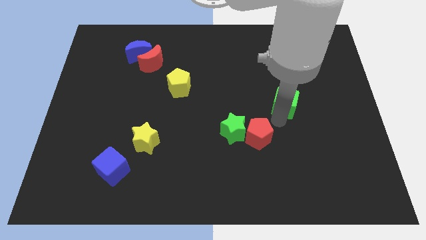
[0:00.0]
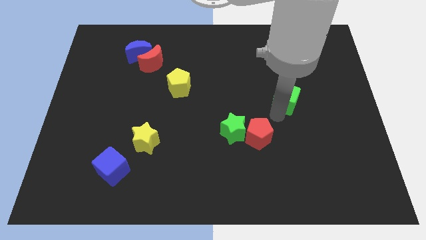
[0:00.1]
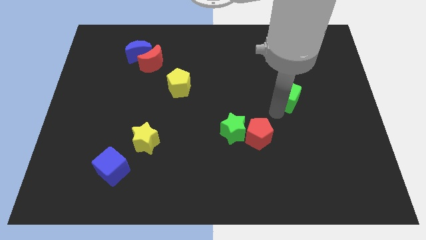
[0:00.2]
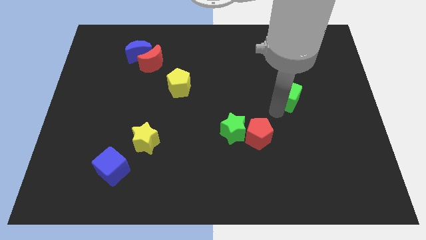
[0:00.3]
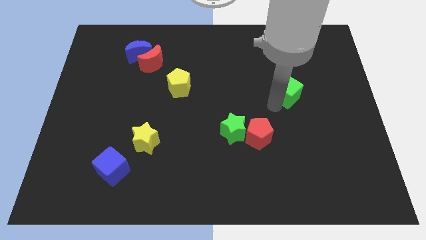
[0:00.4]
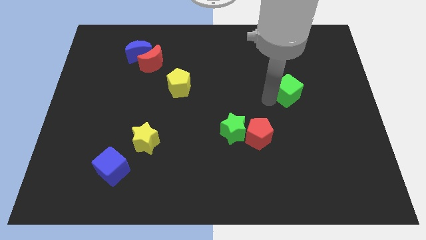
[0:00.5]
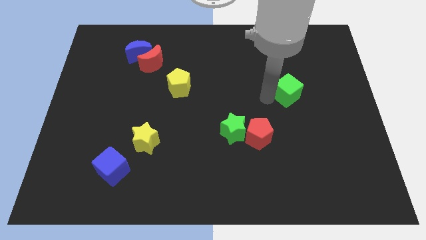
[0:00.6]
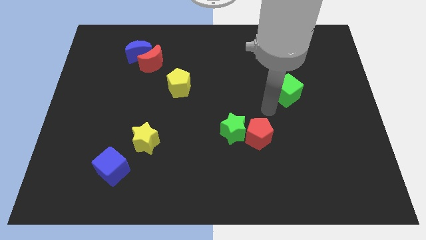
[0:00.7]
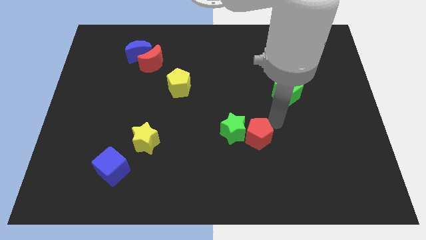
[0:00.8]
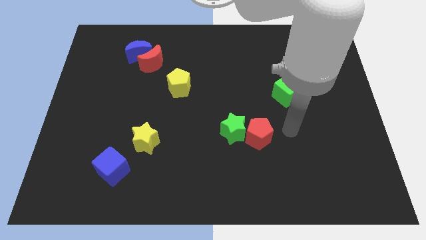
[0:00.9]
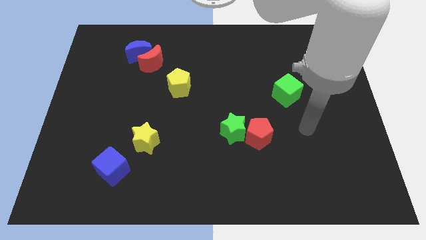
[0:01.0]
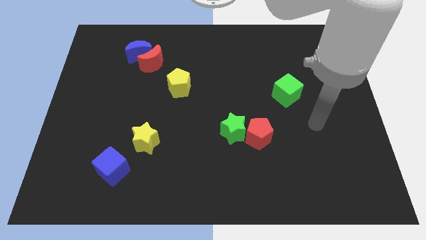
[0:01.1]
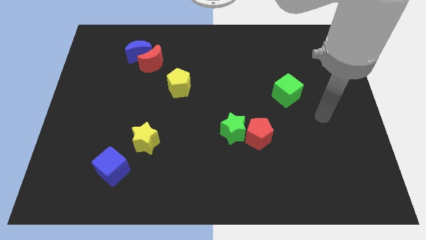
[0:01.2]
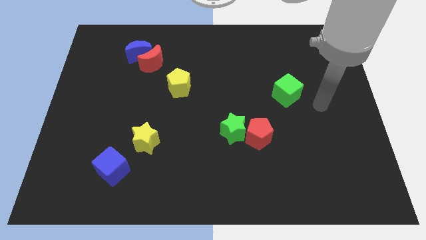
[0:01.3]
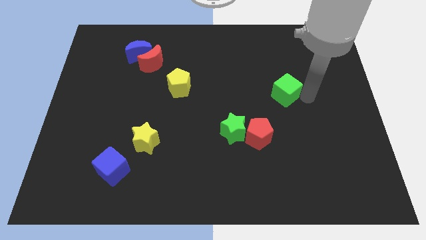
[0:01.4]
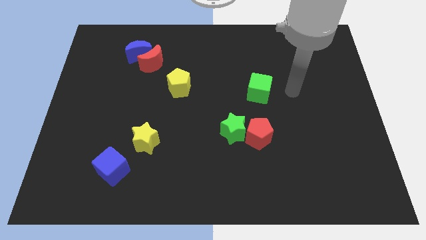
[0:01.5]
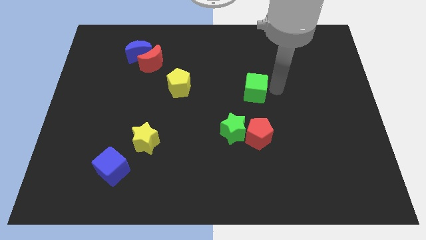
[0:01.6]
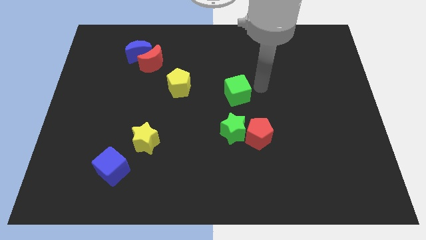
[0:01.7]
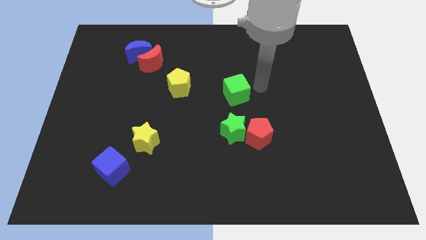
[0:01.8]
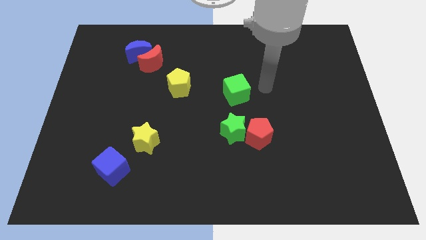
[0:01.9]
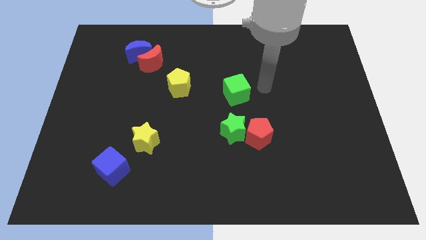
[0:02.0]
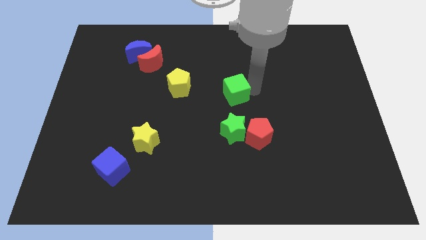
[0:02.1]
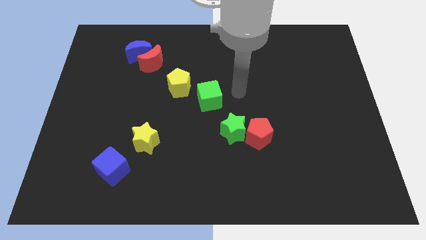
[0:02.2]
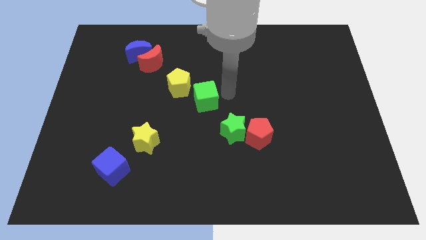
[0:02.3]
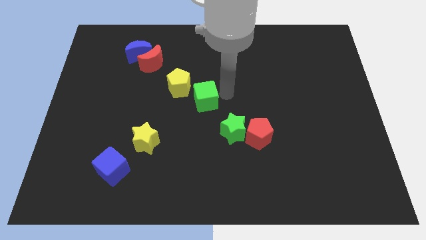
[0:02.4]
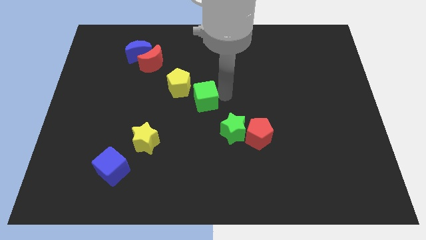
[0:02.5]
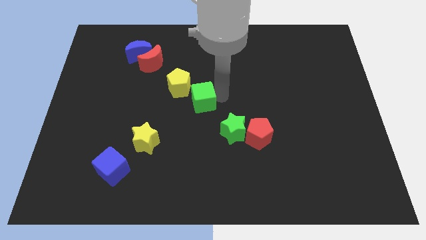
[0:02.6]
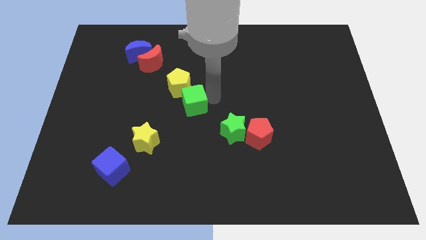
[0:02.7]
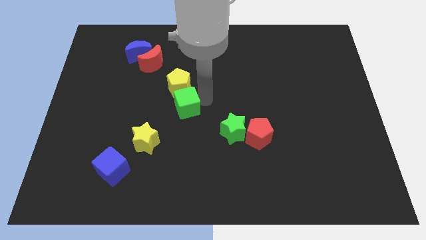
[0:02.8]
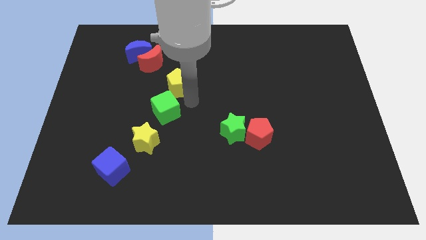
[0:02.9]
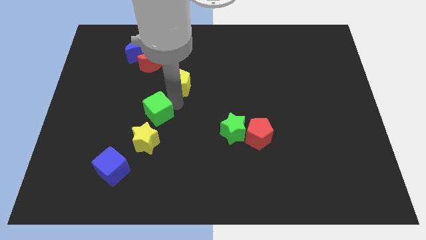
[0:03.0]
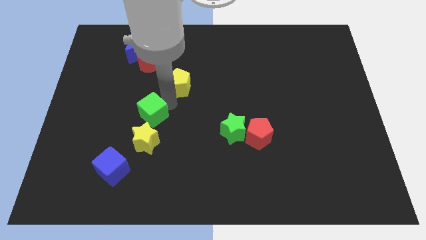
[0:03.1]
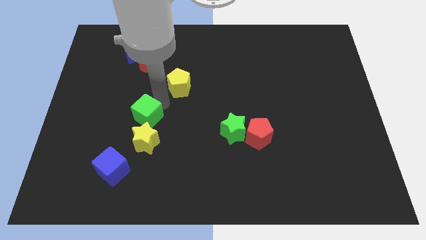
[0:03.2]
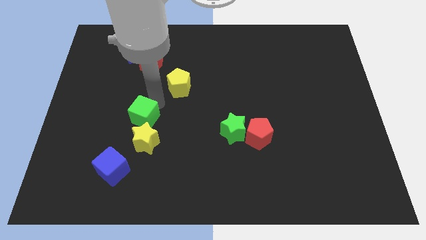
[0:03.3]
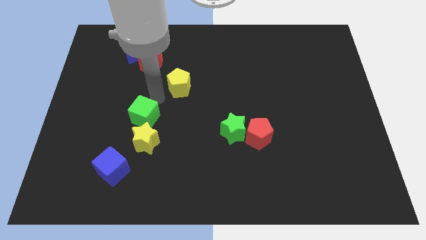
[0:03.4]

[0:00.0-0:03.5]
move the green cube to the left side of the board

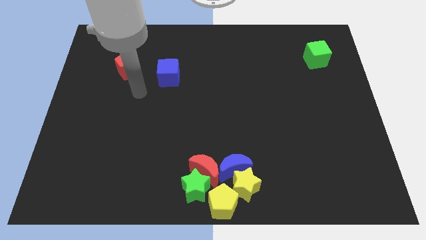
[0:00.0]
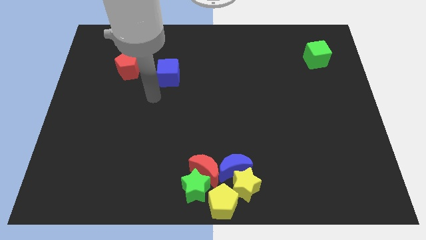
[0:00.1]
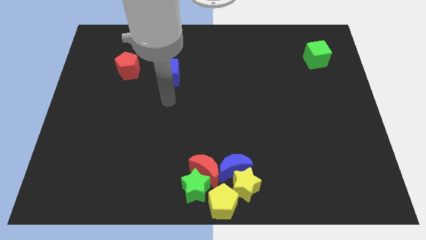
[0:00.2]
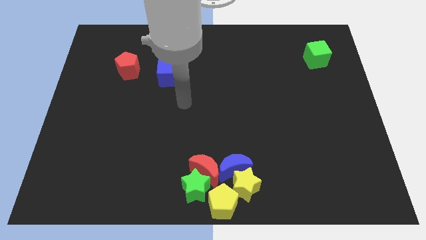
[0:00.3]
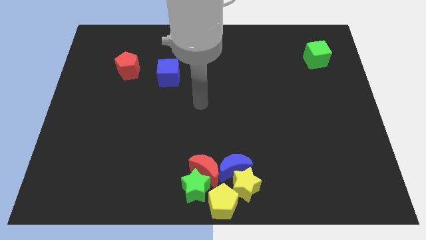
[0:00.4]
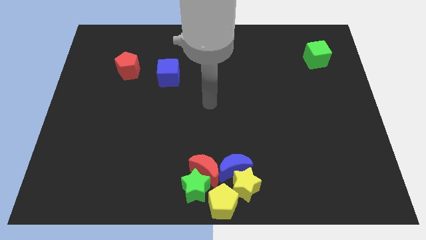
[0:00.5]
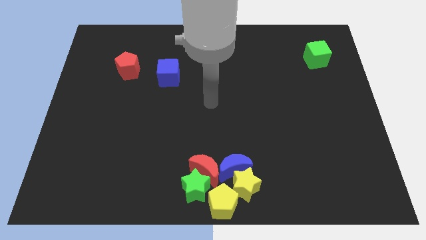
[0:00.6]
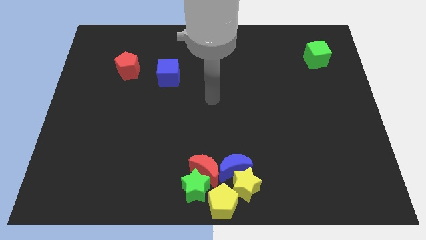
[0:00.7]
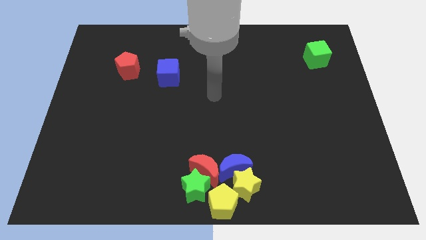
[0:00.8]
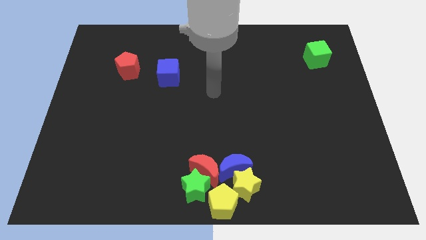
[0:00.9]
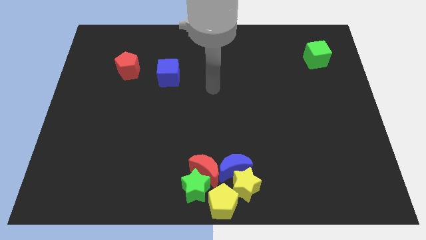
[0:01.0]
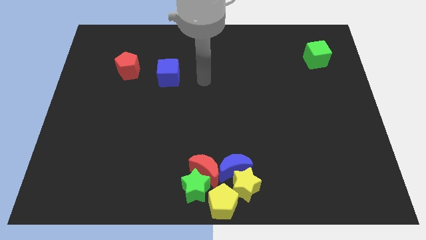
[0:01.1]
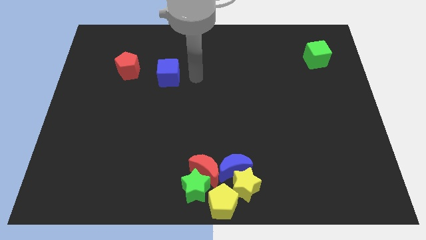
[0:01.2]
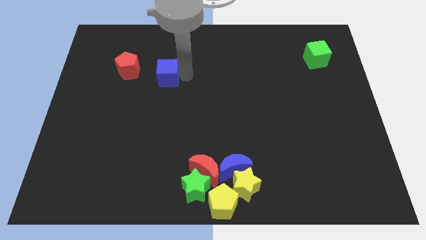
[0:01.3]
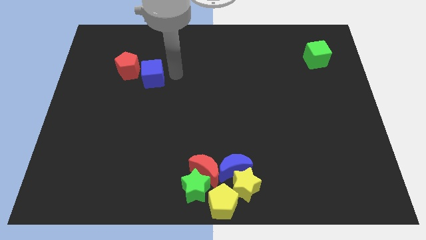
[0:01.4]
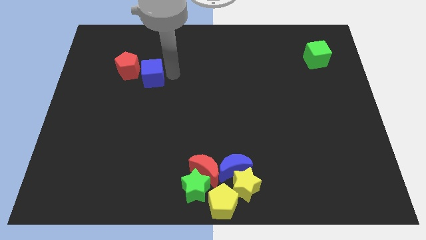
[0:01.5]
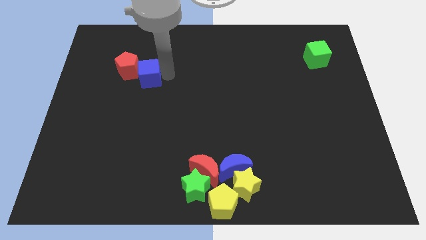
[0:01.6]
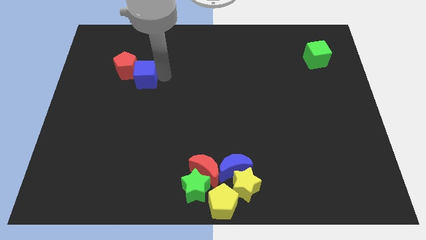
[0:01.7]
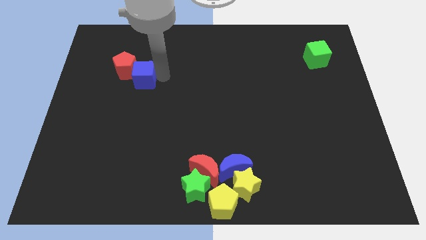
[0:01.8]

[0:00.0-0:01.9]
place blue cube to the right side of the red pentagon

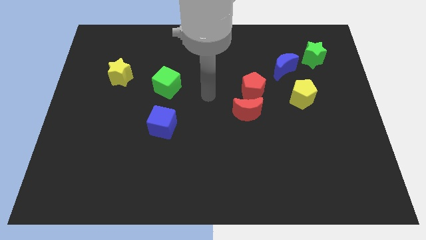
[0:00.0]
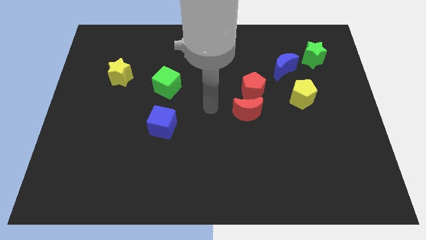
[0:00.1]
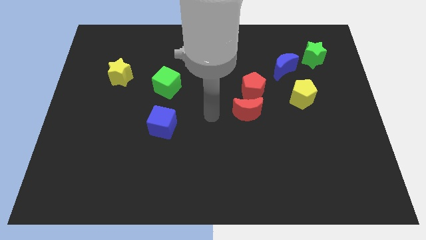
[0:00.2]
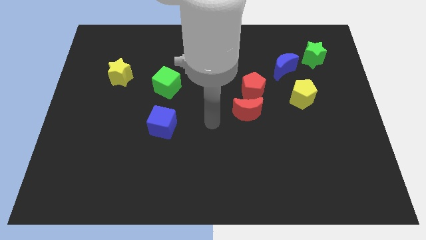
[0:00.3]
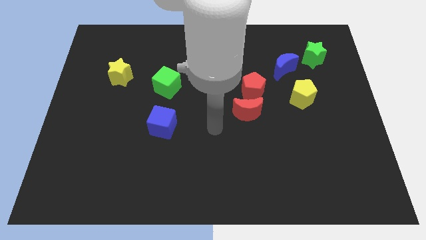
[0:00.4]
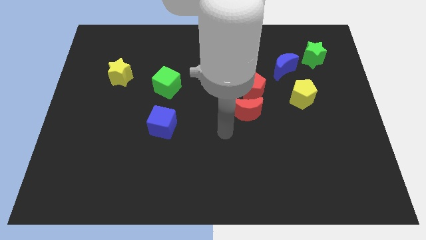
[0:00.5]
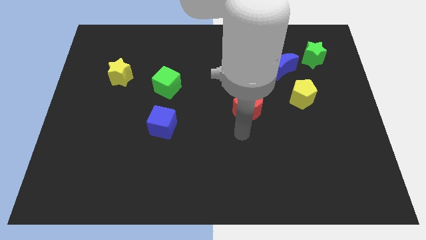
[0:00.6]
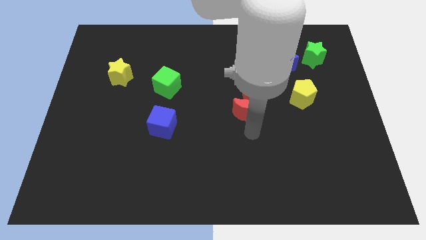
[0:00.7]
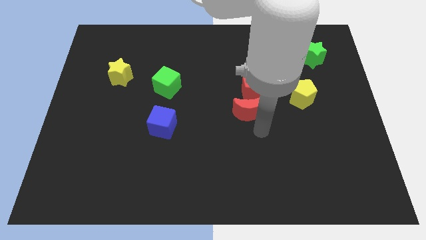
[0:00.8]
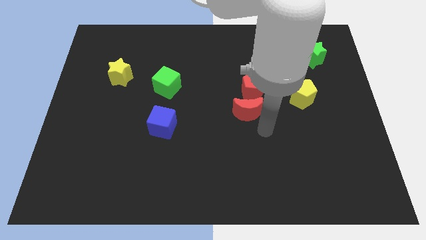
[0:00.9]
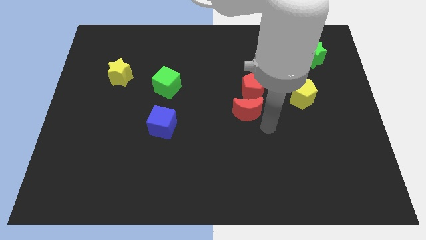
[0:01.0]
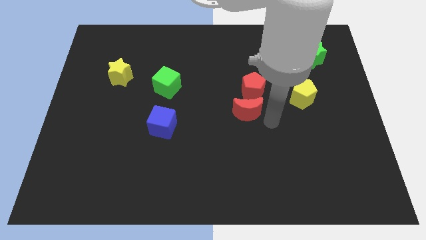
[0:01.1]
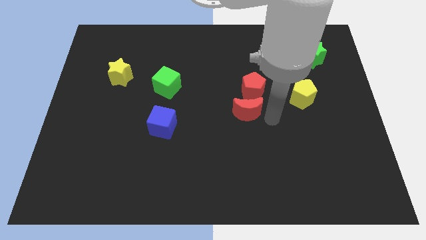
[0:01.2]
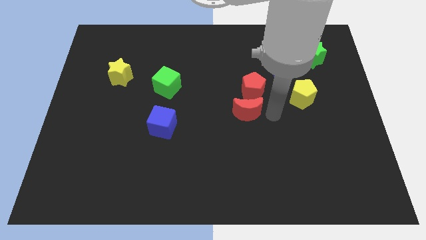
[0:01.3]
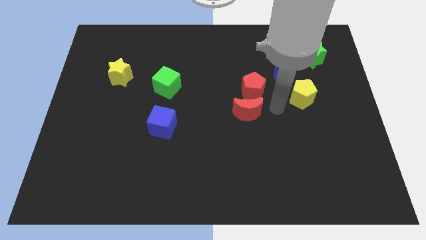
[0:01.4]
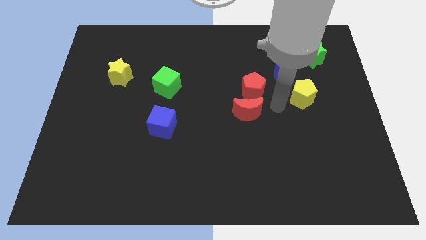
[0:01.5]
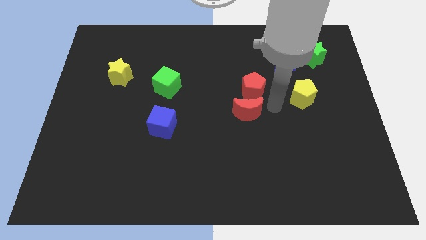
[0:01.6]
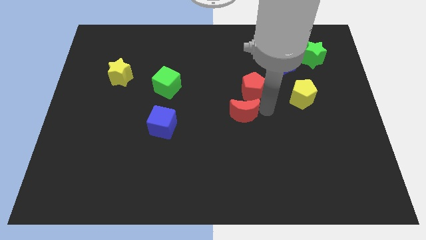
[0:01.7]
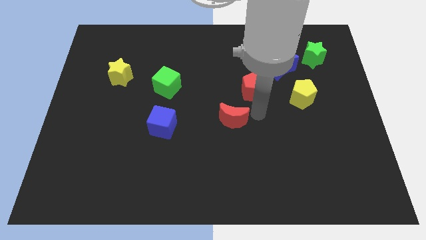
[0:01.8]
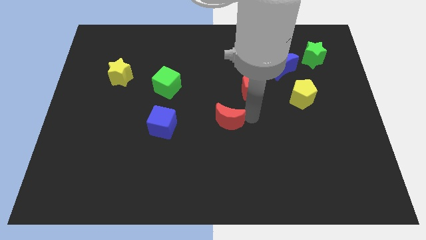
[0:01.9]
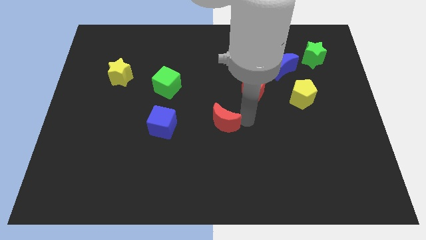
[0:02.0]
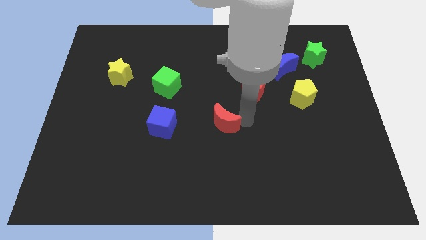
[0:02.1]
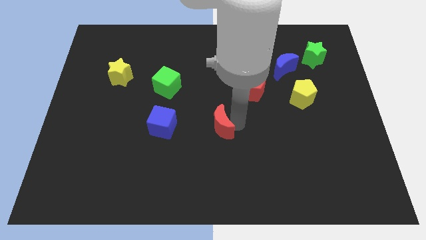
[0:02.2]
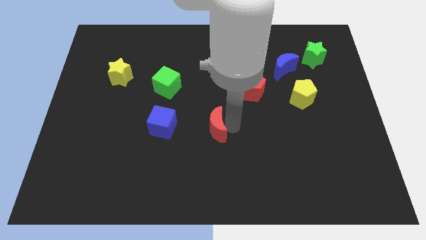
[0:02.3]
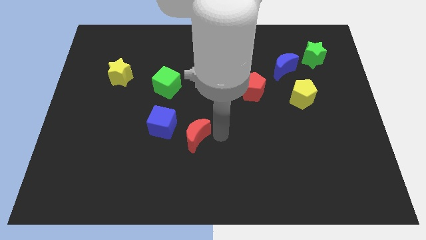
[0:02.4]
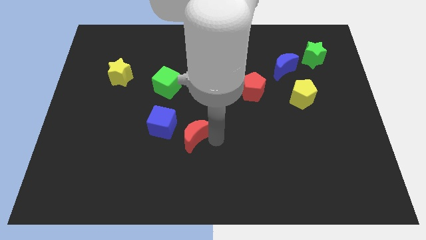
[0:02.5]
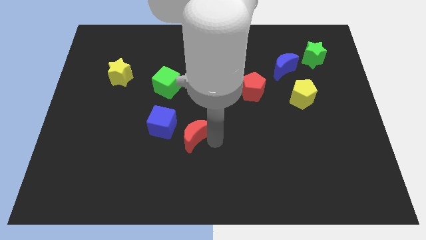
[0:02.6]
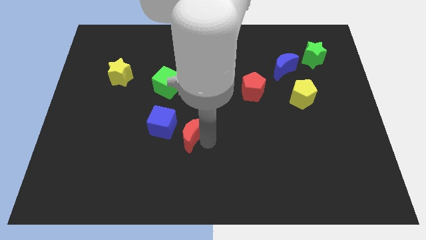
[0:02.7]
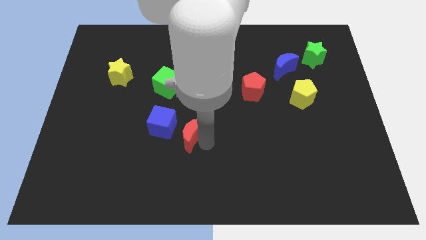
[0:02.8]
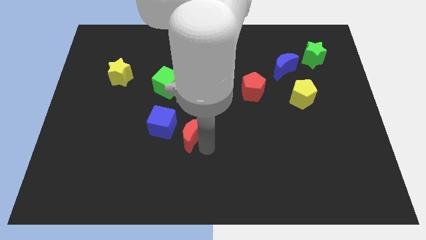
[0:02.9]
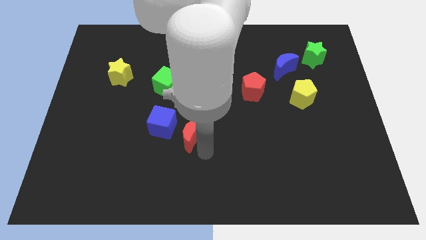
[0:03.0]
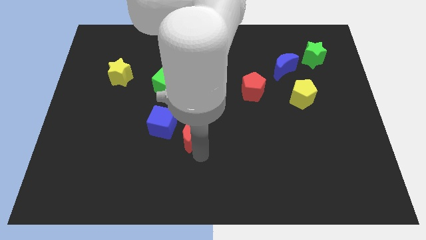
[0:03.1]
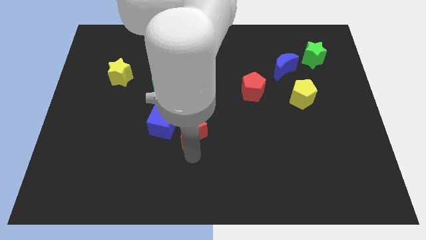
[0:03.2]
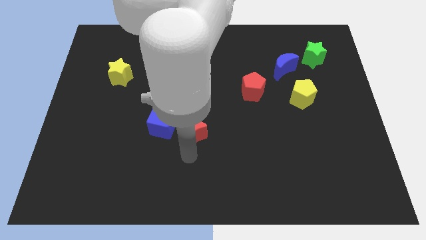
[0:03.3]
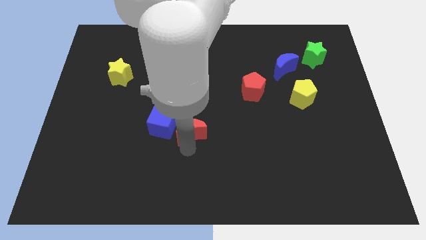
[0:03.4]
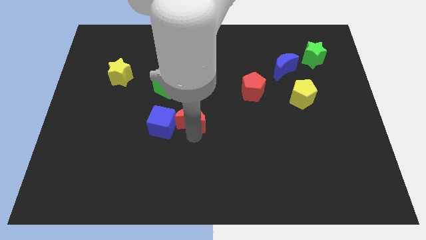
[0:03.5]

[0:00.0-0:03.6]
place the red crescent to the right side of the blue cube
